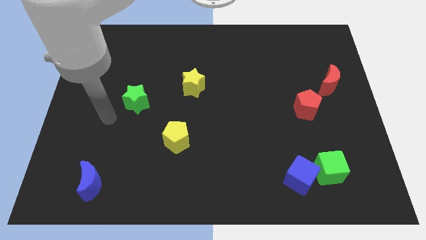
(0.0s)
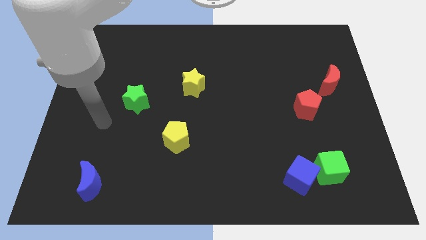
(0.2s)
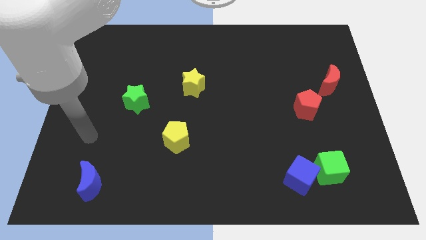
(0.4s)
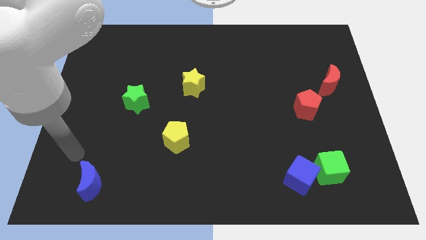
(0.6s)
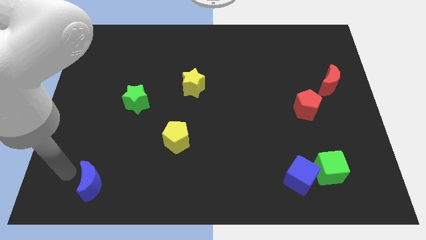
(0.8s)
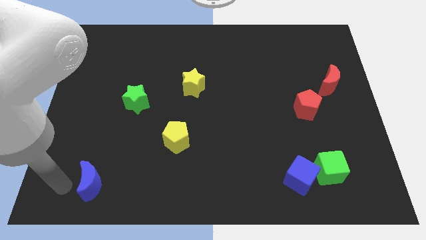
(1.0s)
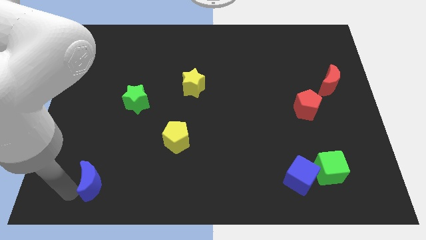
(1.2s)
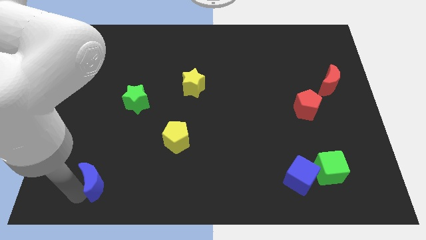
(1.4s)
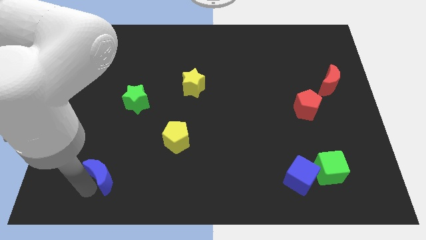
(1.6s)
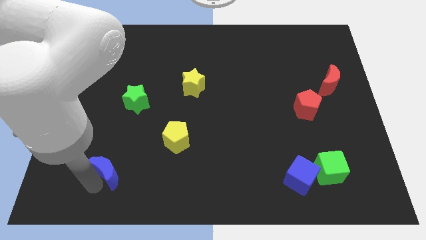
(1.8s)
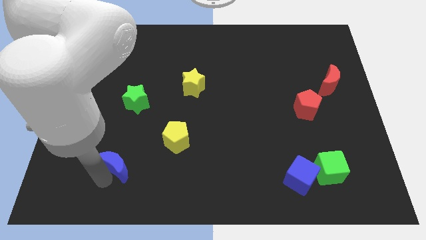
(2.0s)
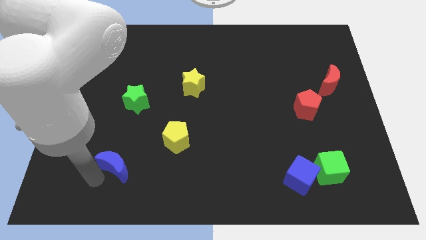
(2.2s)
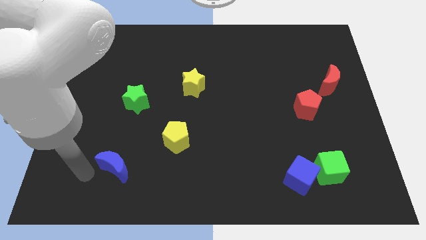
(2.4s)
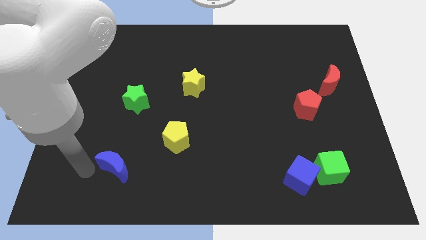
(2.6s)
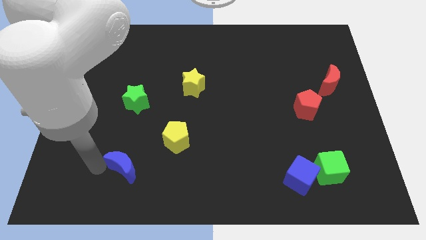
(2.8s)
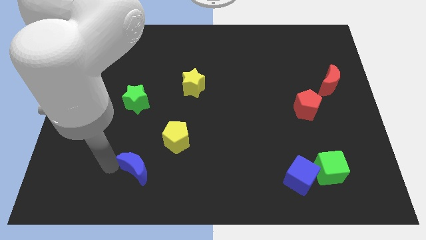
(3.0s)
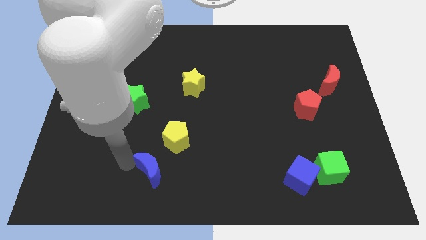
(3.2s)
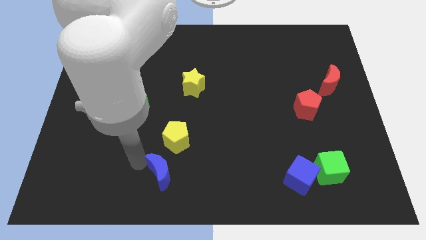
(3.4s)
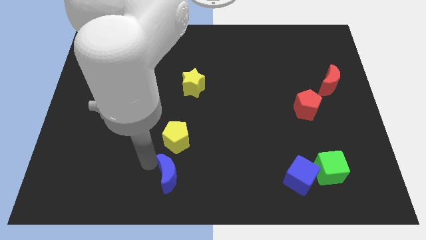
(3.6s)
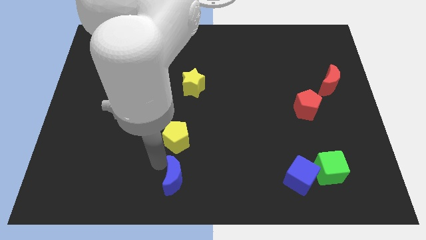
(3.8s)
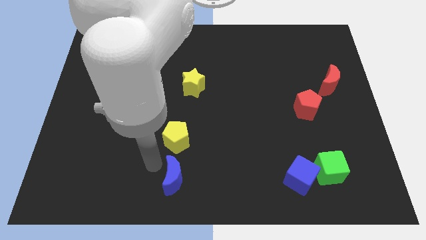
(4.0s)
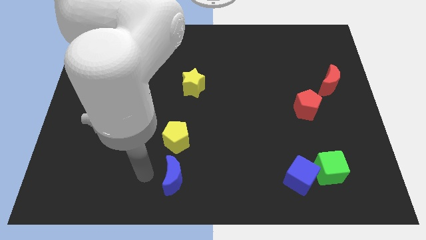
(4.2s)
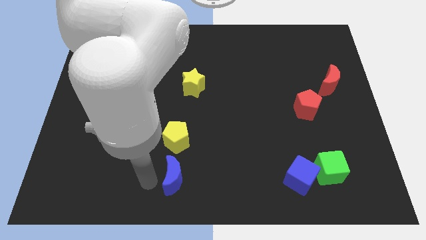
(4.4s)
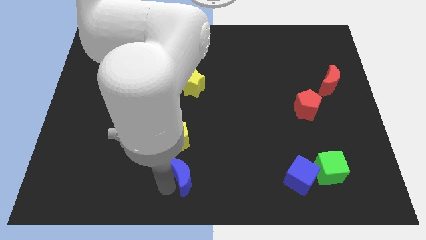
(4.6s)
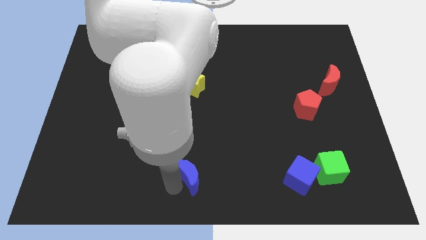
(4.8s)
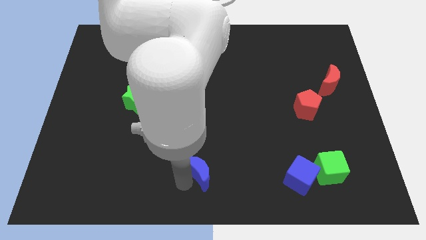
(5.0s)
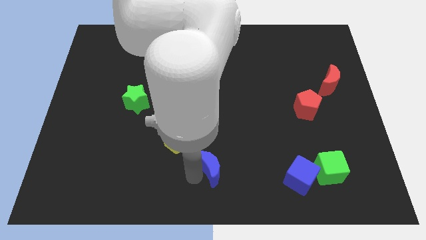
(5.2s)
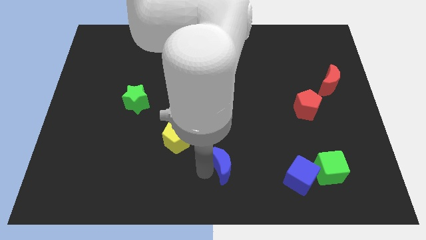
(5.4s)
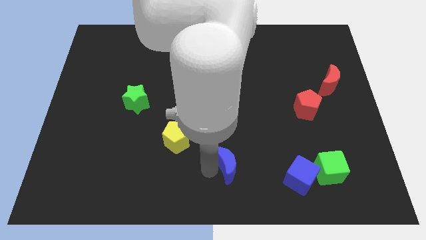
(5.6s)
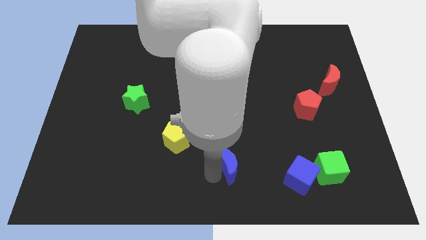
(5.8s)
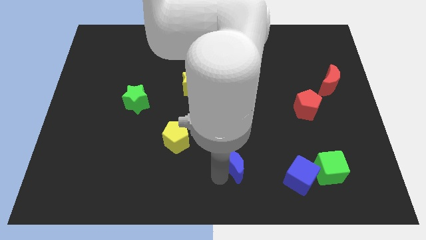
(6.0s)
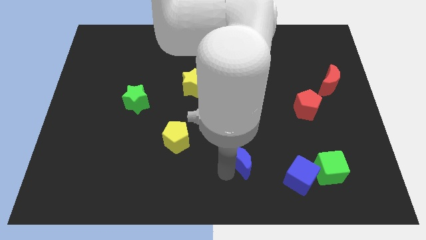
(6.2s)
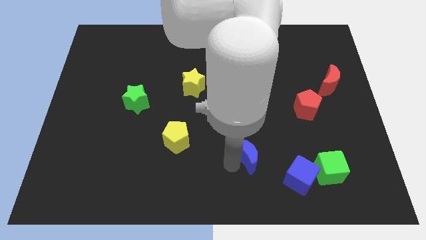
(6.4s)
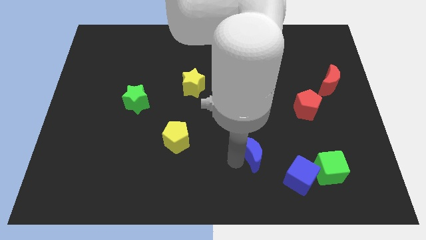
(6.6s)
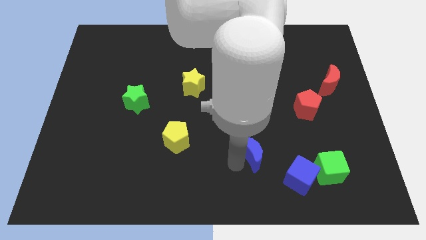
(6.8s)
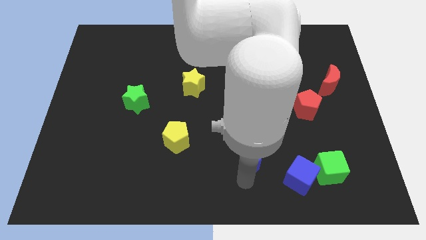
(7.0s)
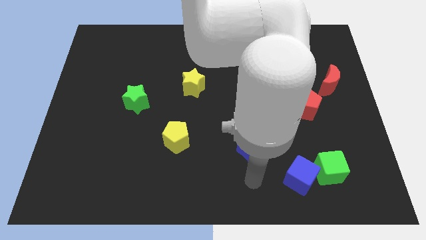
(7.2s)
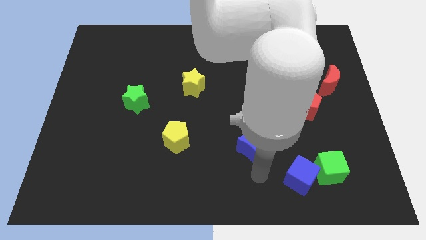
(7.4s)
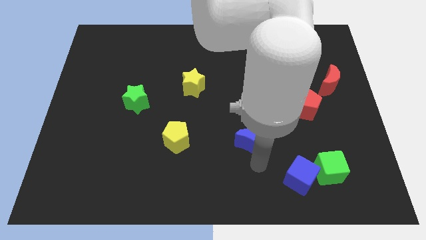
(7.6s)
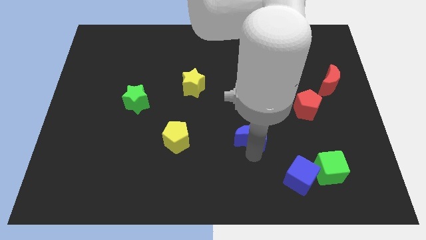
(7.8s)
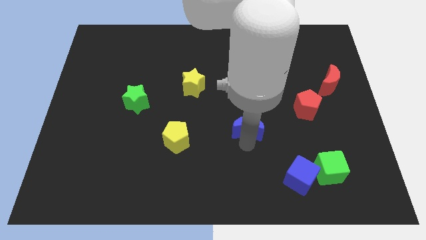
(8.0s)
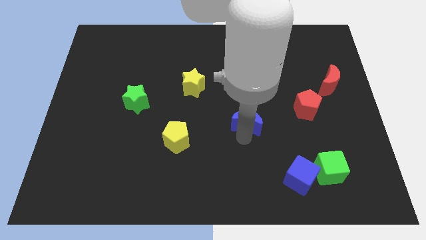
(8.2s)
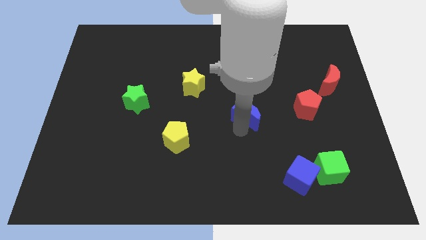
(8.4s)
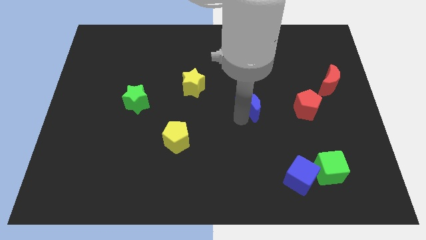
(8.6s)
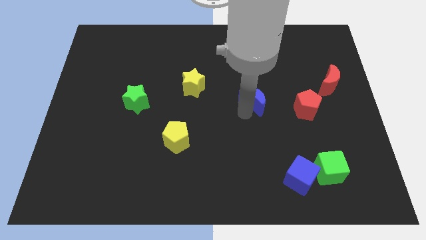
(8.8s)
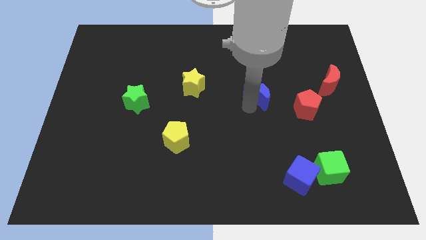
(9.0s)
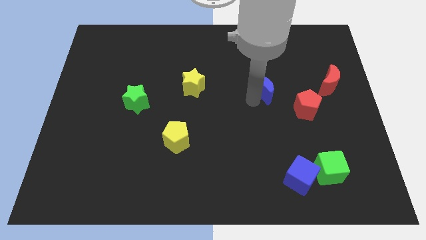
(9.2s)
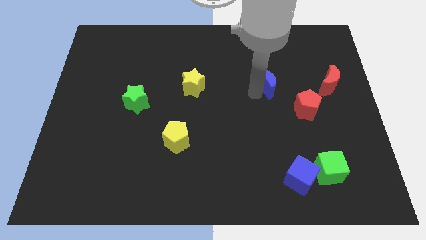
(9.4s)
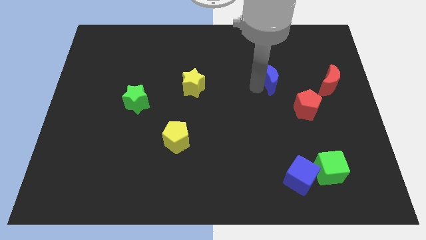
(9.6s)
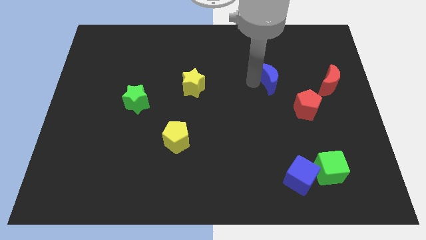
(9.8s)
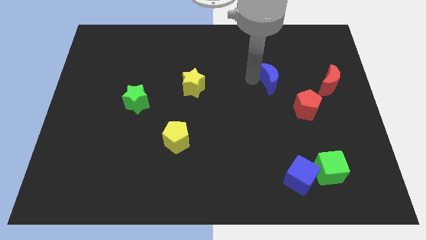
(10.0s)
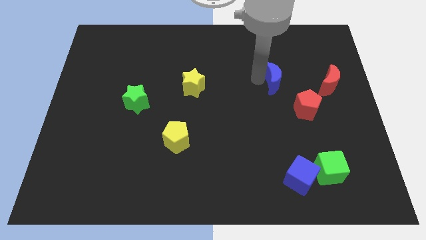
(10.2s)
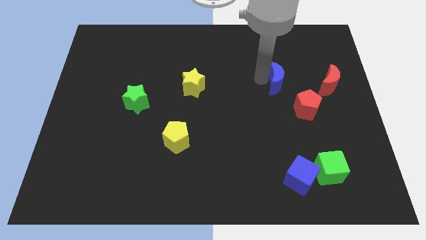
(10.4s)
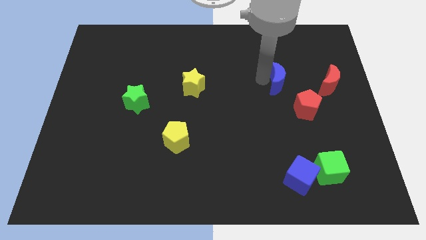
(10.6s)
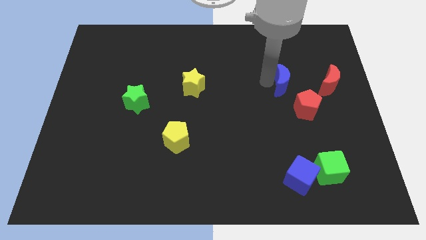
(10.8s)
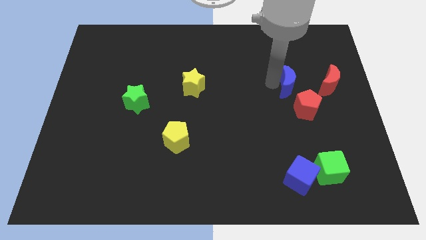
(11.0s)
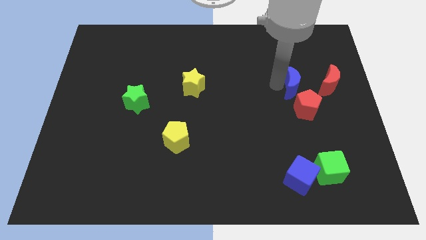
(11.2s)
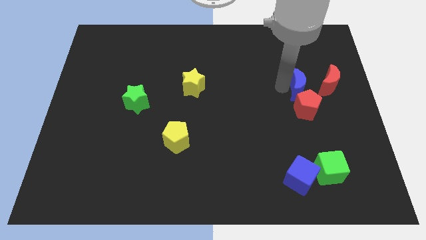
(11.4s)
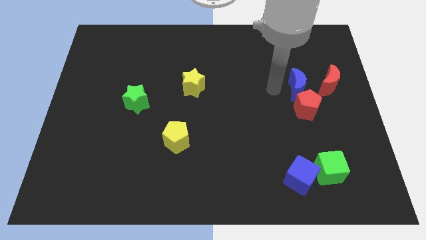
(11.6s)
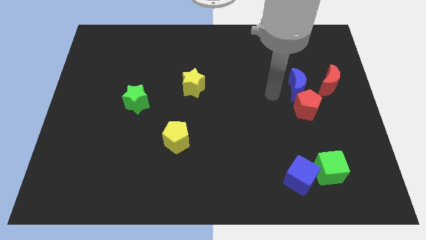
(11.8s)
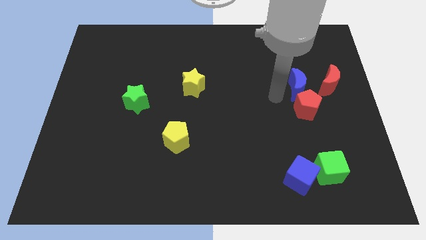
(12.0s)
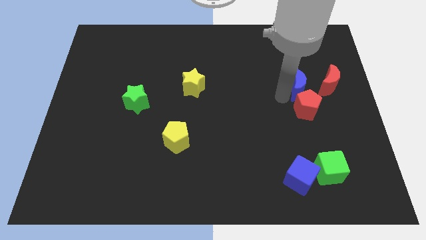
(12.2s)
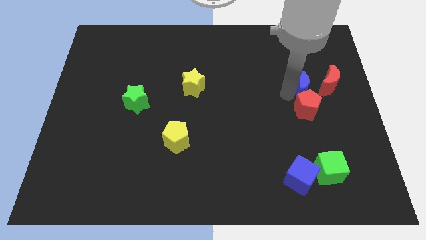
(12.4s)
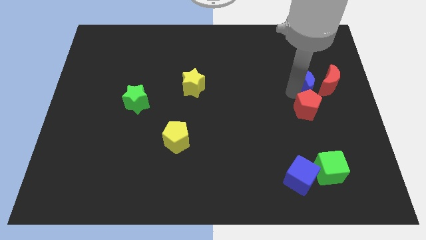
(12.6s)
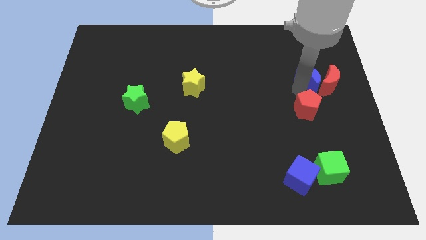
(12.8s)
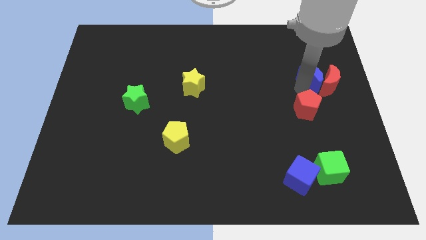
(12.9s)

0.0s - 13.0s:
push the blue moon towards the red moon

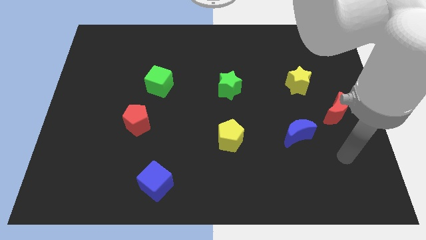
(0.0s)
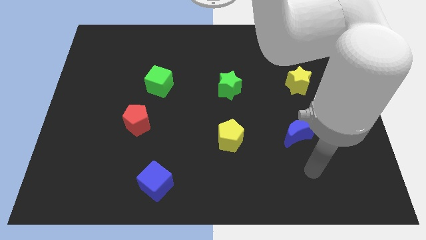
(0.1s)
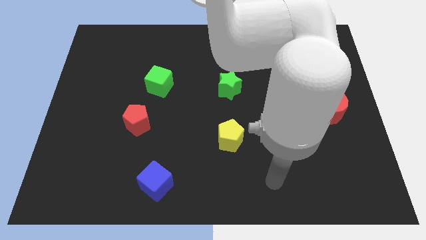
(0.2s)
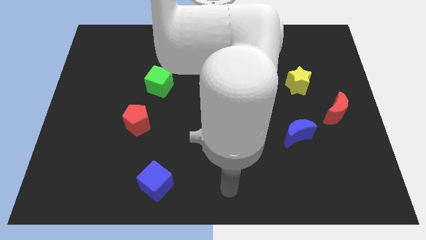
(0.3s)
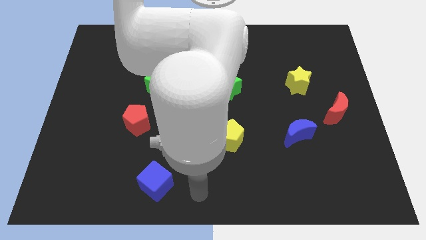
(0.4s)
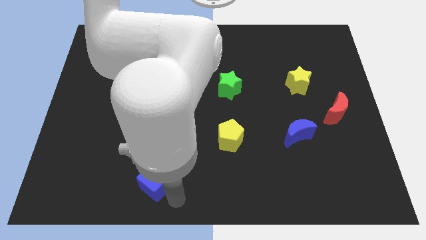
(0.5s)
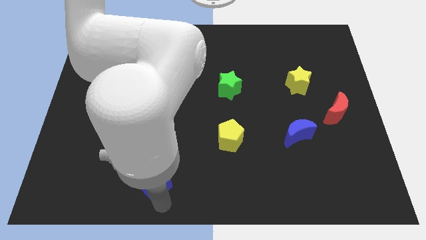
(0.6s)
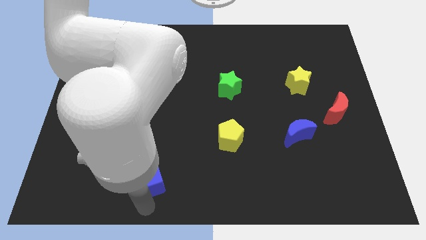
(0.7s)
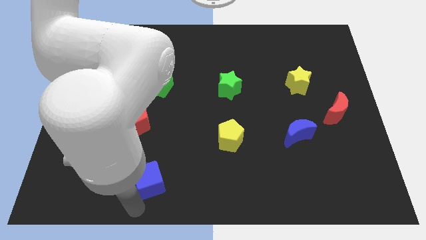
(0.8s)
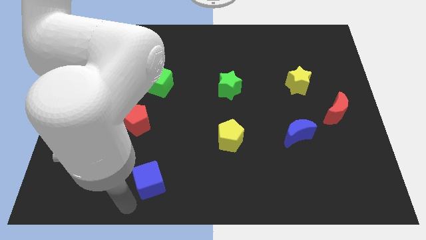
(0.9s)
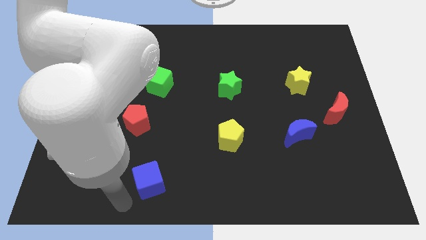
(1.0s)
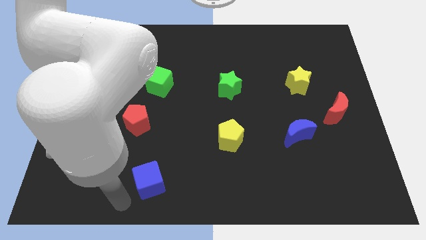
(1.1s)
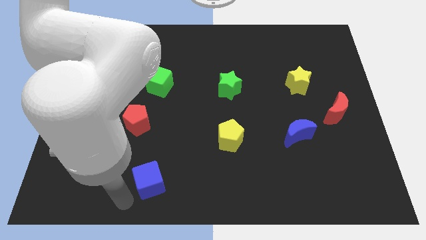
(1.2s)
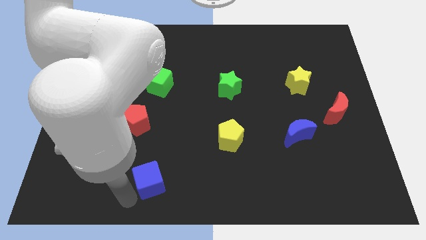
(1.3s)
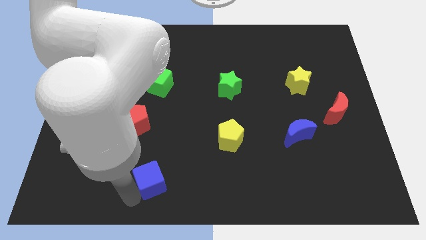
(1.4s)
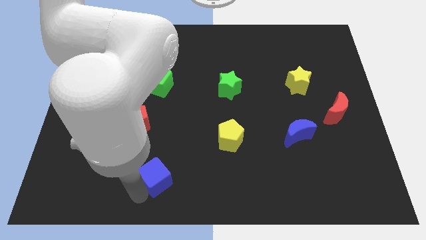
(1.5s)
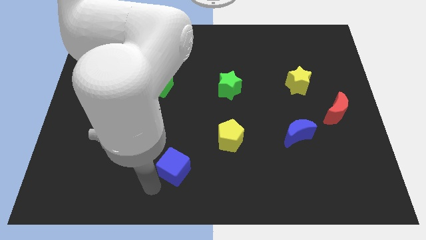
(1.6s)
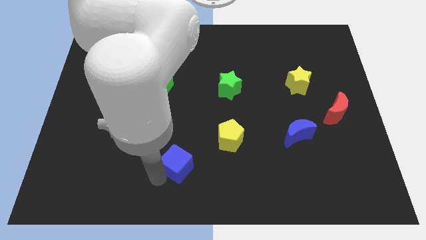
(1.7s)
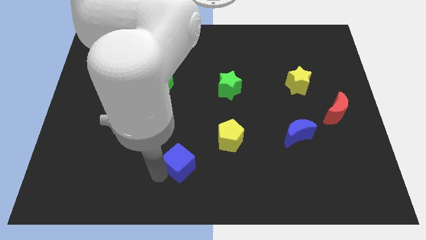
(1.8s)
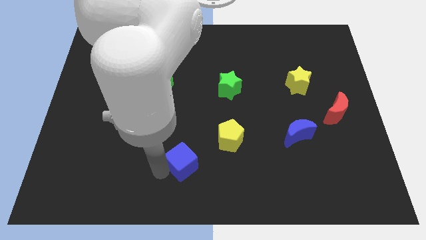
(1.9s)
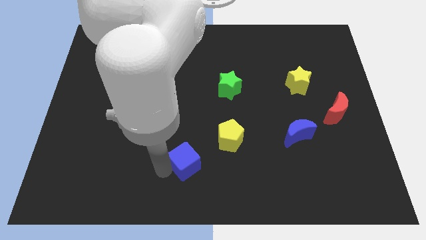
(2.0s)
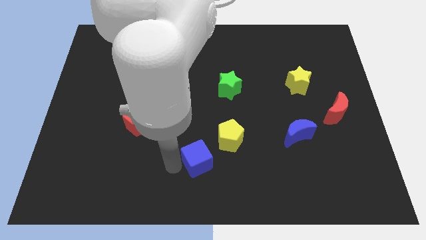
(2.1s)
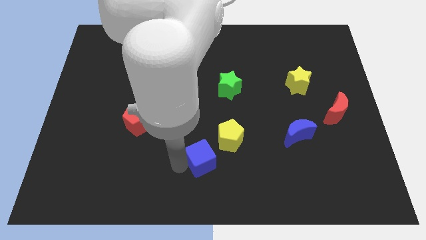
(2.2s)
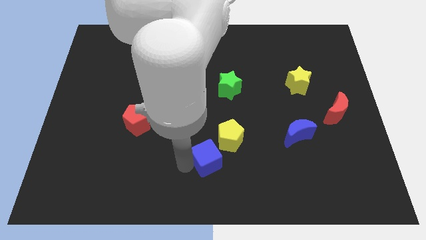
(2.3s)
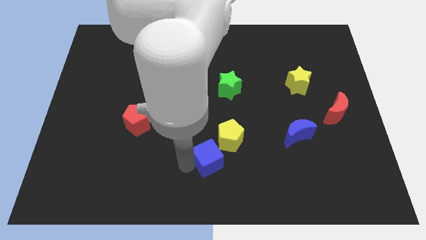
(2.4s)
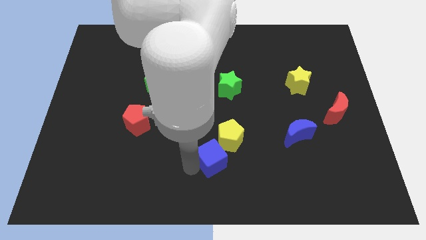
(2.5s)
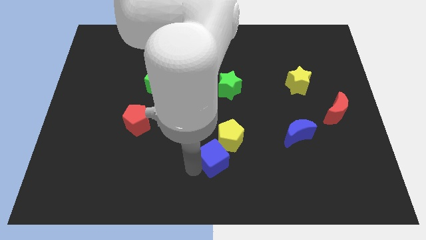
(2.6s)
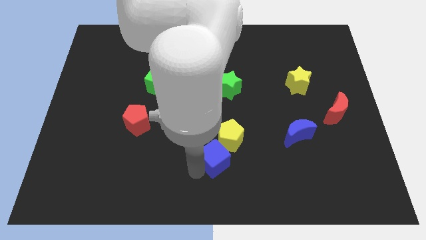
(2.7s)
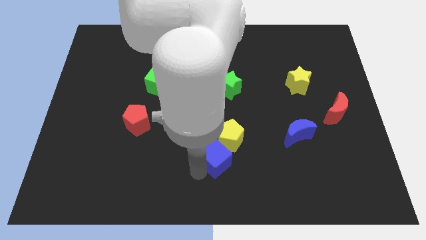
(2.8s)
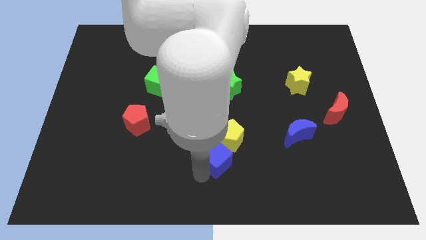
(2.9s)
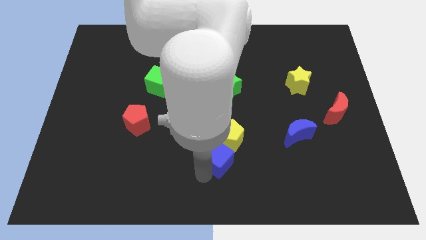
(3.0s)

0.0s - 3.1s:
move the blue cube to the yellow pentagon
